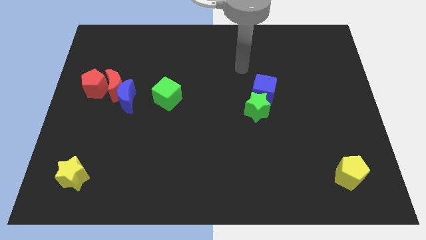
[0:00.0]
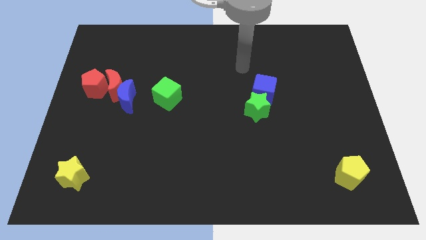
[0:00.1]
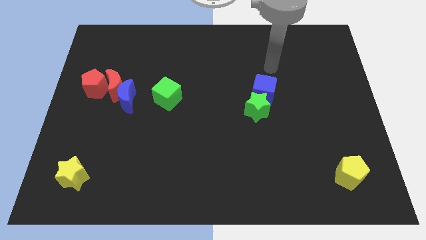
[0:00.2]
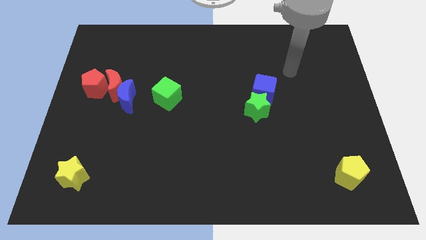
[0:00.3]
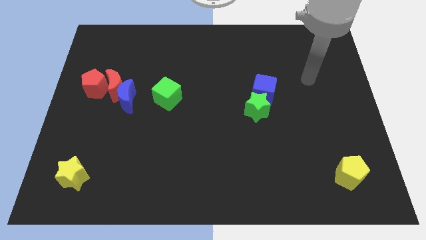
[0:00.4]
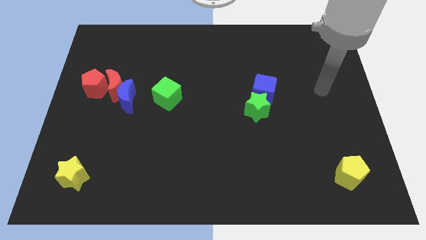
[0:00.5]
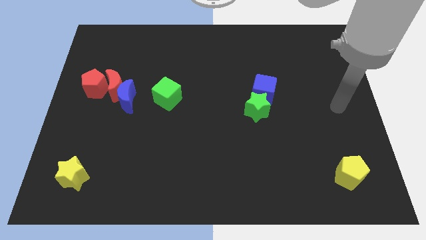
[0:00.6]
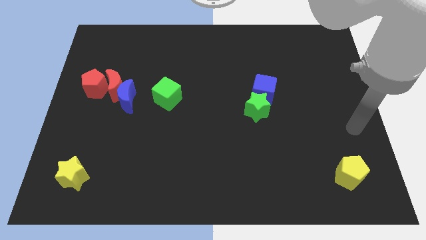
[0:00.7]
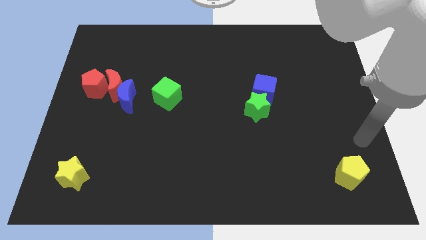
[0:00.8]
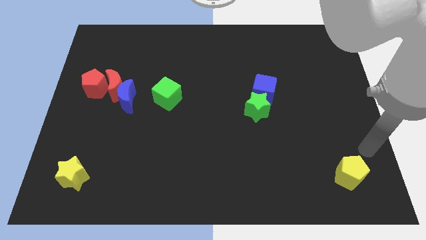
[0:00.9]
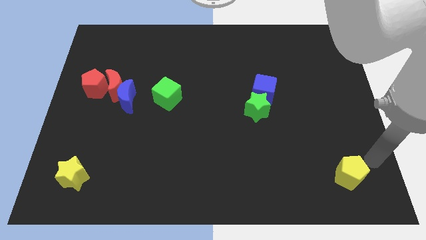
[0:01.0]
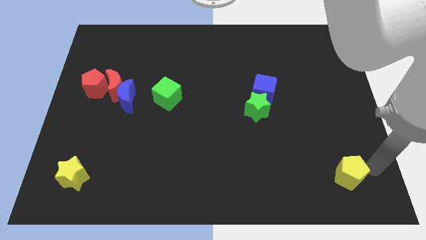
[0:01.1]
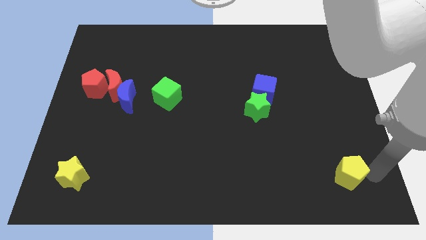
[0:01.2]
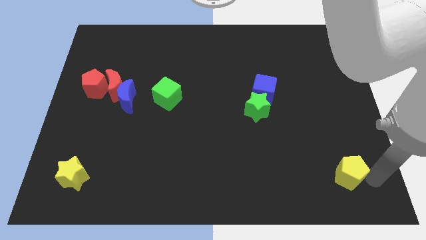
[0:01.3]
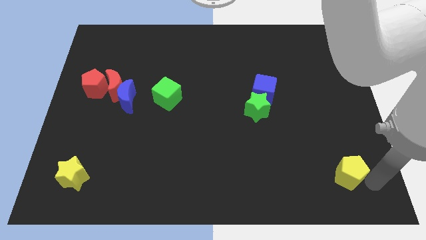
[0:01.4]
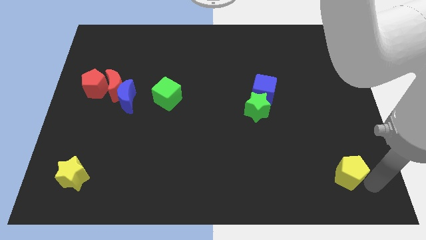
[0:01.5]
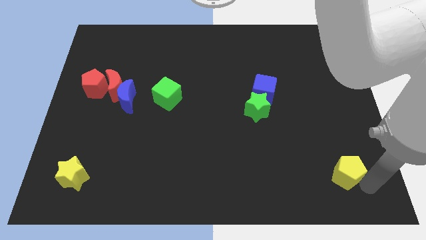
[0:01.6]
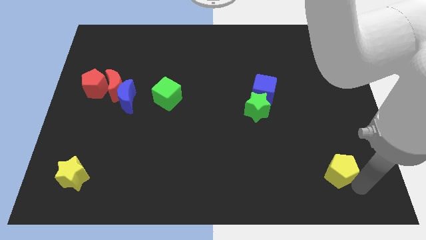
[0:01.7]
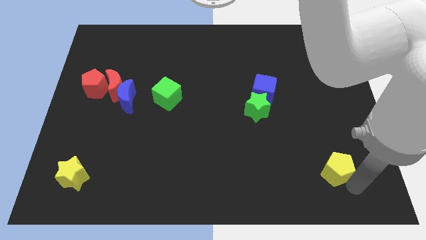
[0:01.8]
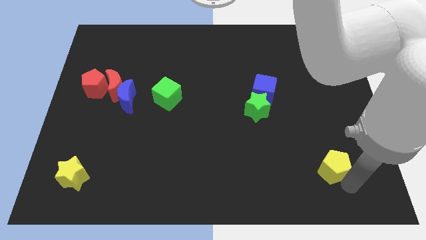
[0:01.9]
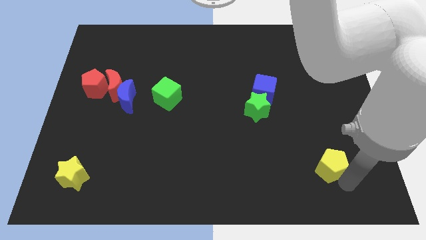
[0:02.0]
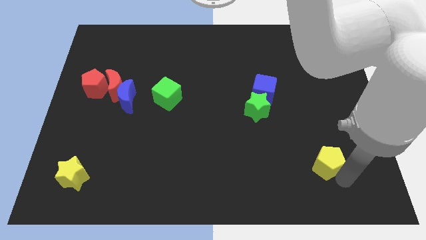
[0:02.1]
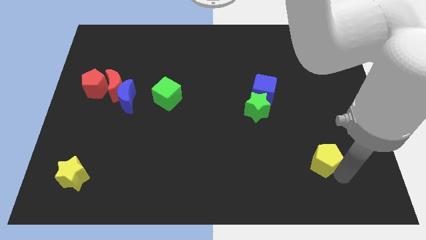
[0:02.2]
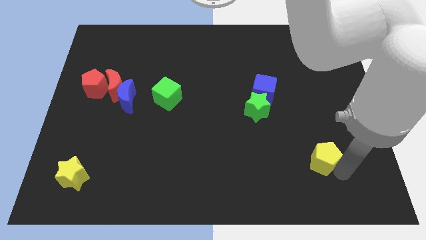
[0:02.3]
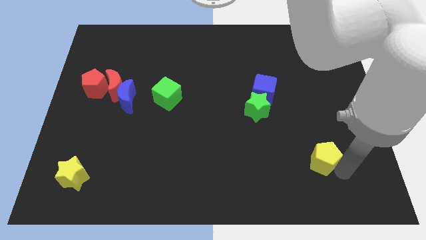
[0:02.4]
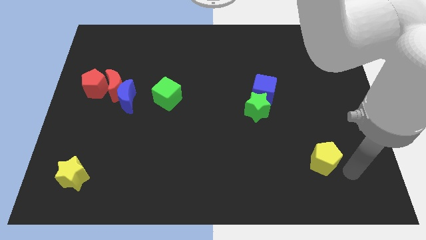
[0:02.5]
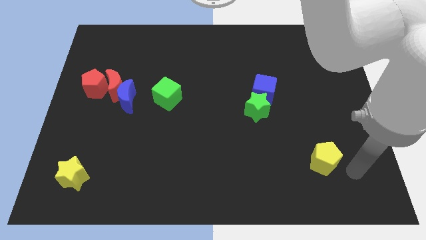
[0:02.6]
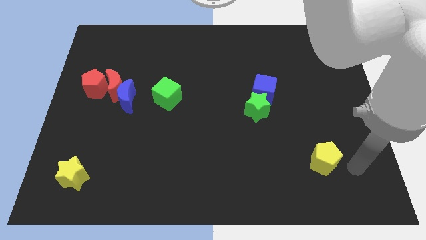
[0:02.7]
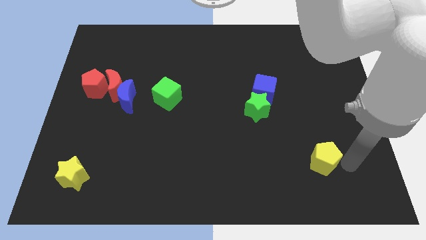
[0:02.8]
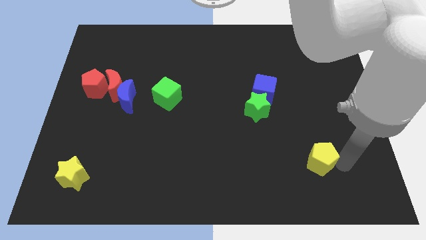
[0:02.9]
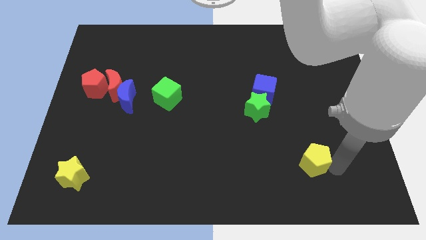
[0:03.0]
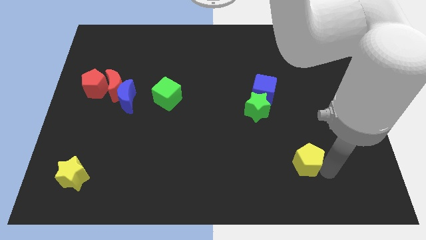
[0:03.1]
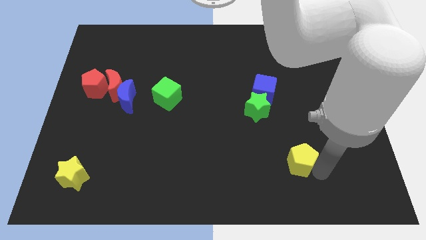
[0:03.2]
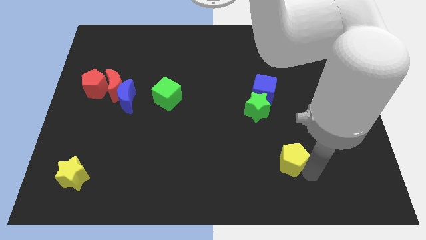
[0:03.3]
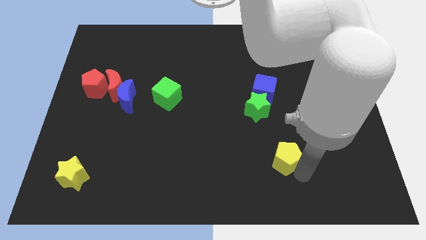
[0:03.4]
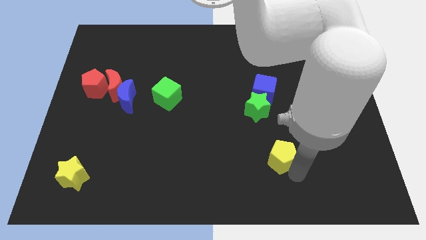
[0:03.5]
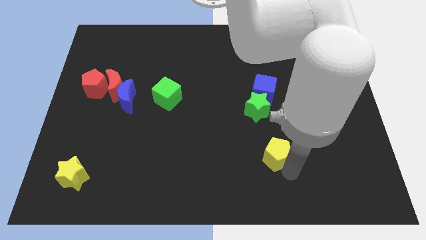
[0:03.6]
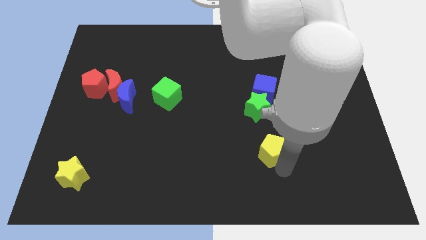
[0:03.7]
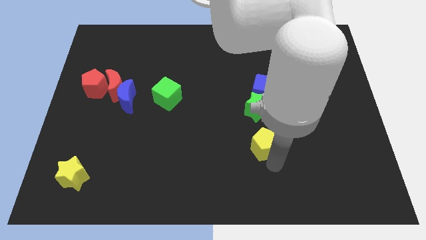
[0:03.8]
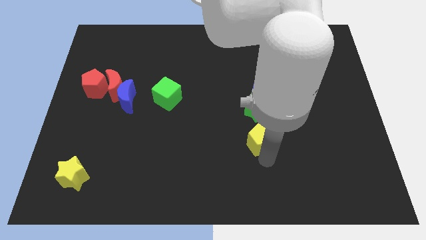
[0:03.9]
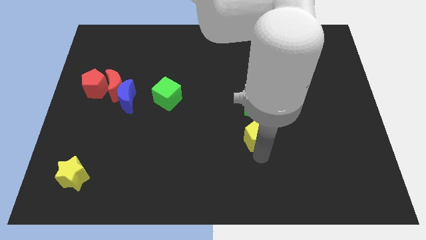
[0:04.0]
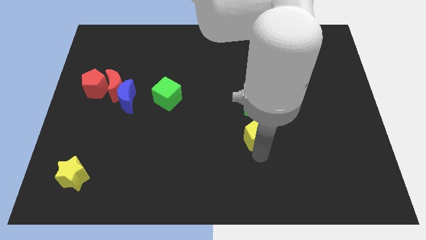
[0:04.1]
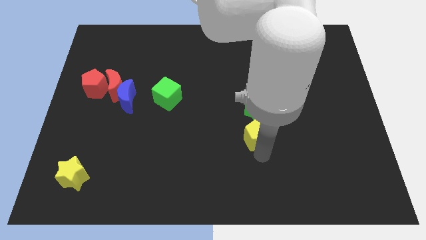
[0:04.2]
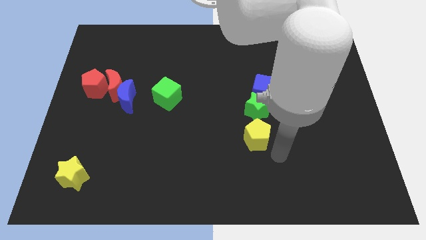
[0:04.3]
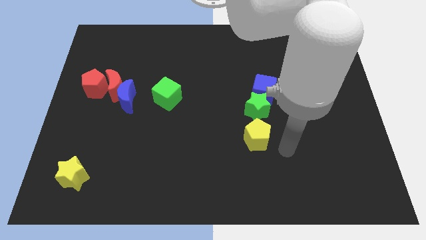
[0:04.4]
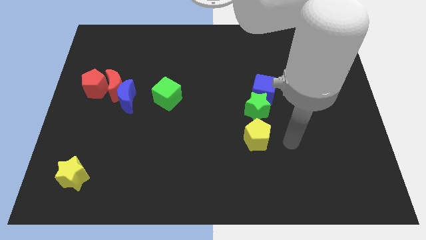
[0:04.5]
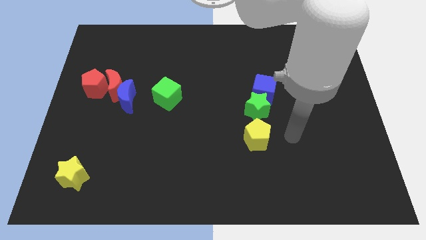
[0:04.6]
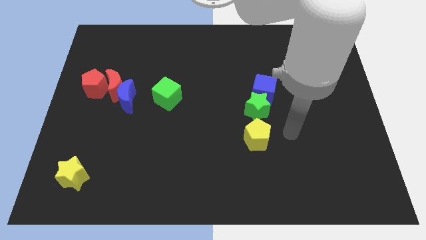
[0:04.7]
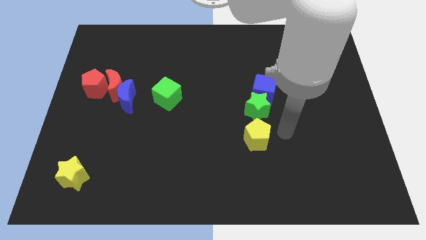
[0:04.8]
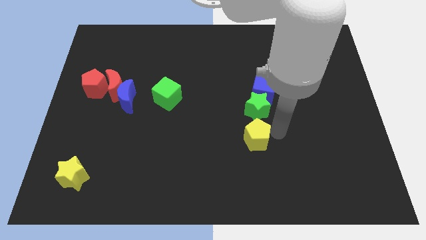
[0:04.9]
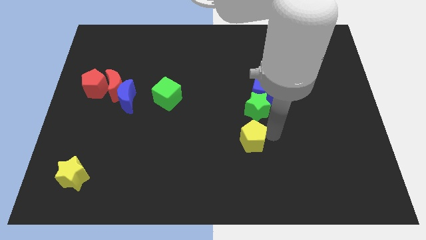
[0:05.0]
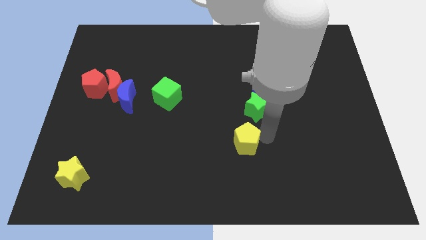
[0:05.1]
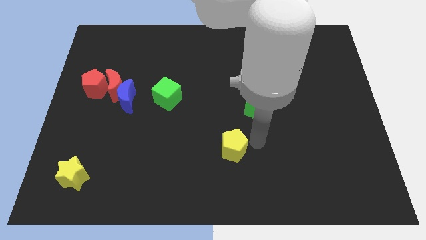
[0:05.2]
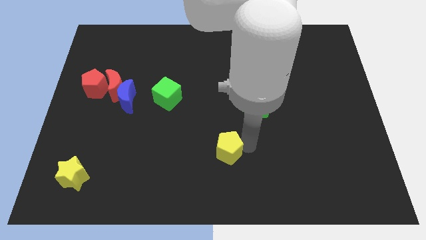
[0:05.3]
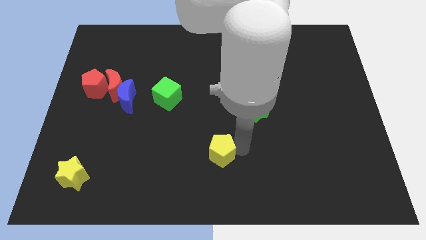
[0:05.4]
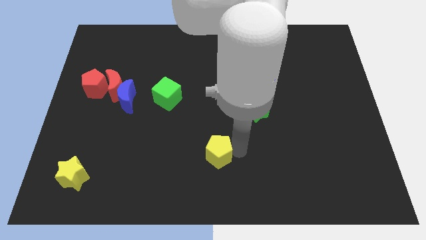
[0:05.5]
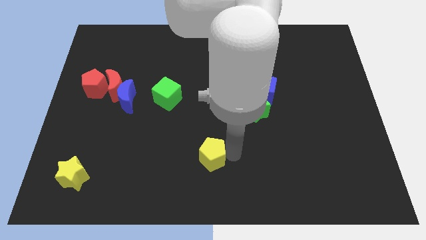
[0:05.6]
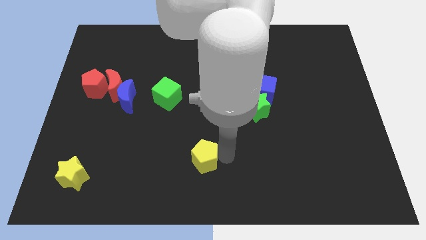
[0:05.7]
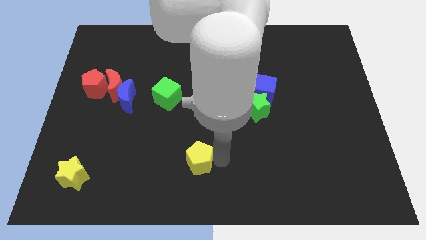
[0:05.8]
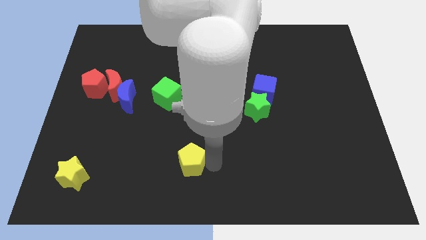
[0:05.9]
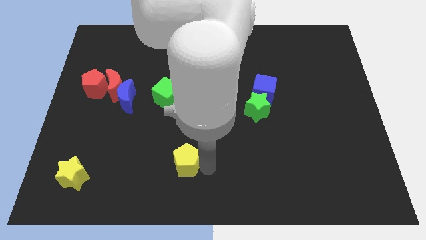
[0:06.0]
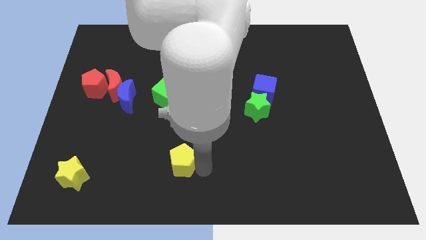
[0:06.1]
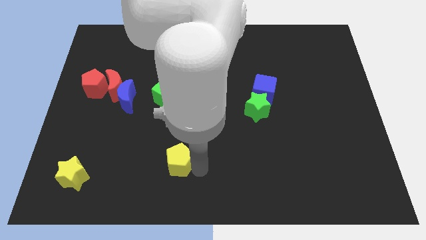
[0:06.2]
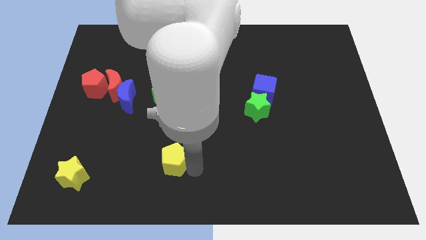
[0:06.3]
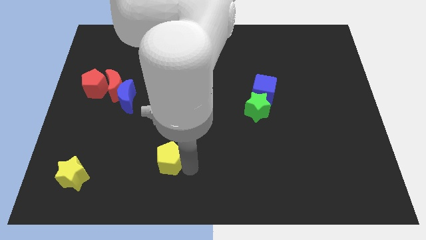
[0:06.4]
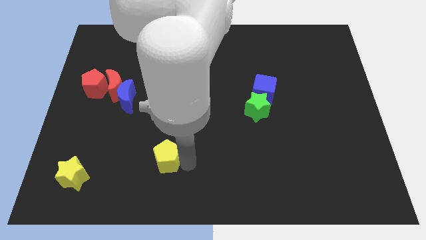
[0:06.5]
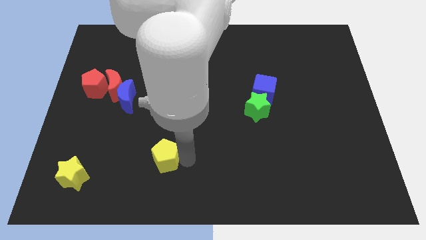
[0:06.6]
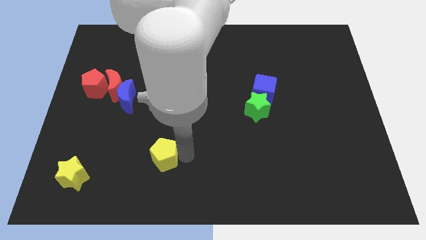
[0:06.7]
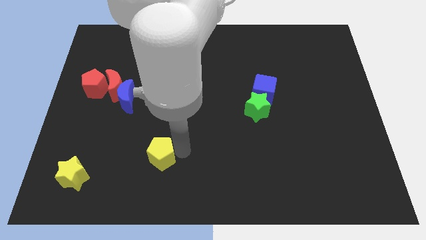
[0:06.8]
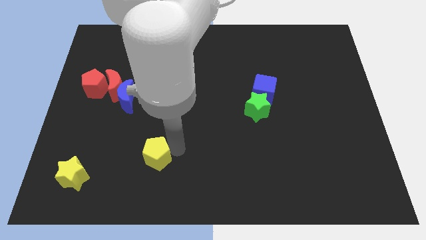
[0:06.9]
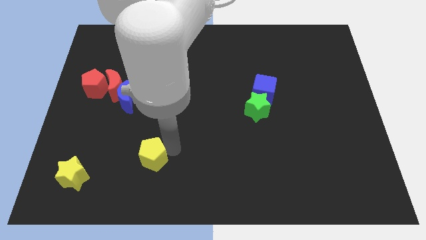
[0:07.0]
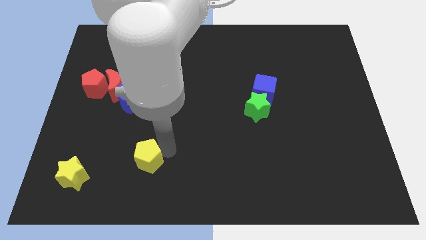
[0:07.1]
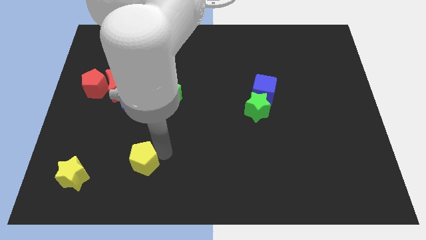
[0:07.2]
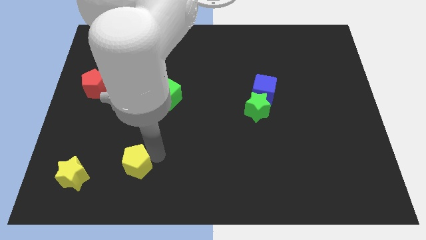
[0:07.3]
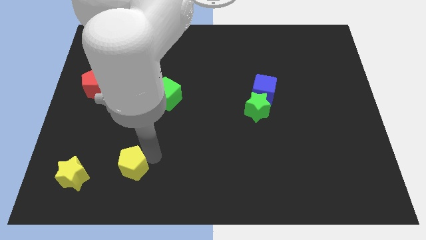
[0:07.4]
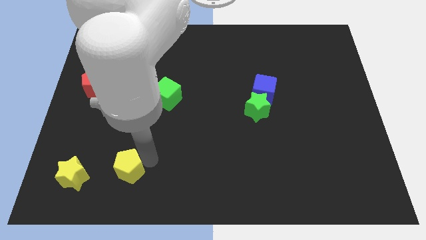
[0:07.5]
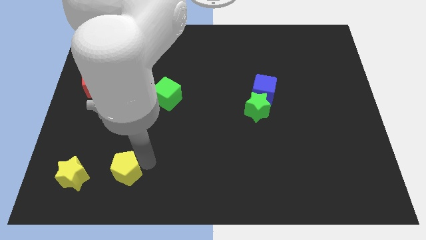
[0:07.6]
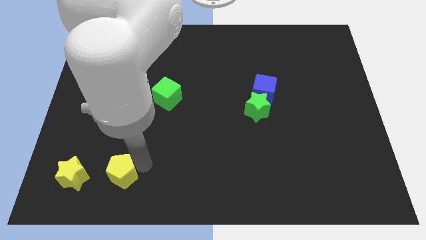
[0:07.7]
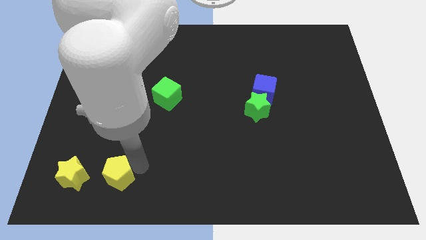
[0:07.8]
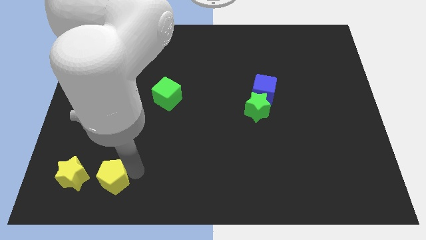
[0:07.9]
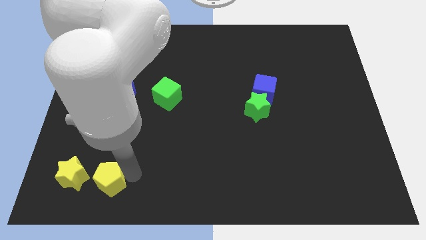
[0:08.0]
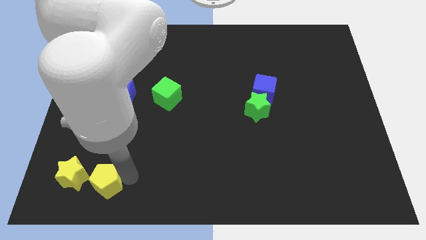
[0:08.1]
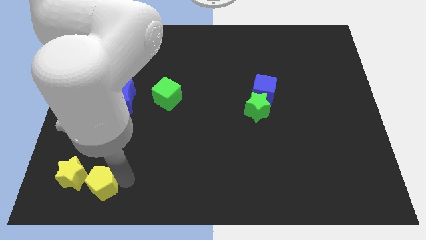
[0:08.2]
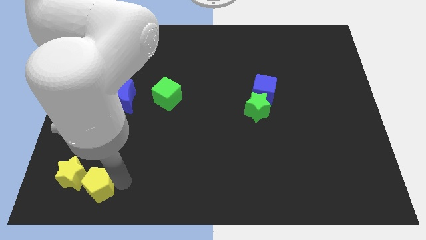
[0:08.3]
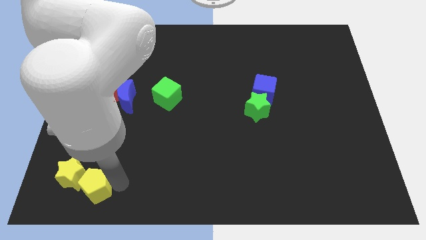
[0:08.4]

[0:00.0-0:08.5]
slide the yellow pentagon close to the yellow star

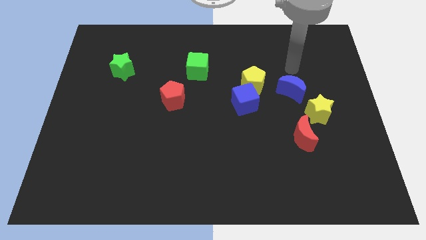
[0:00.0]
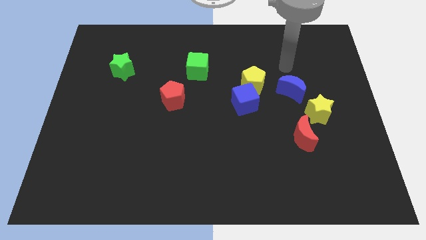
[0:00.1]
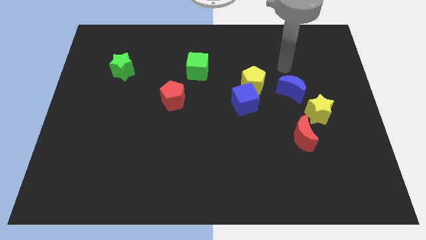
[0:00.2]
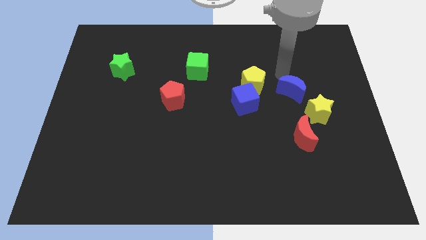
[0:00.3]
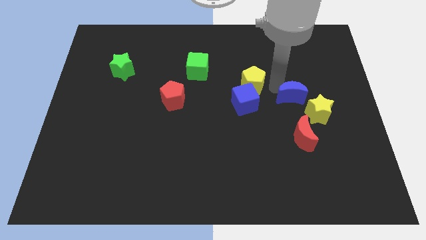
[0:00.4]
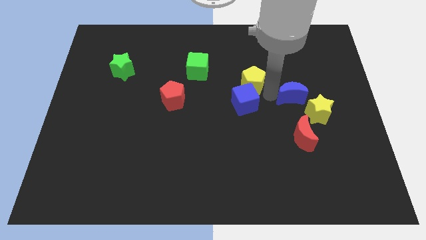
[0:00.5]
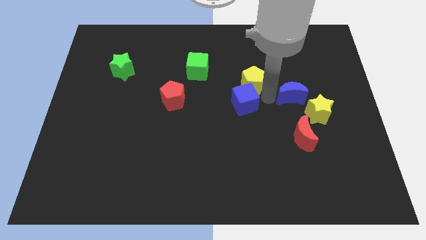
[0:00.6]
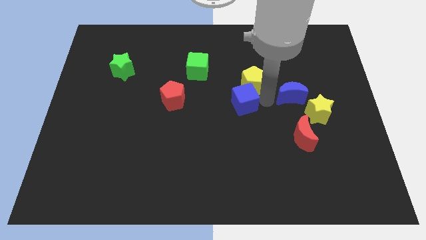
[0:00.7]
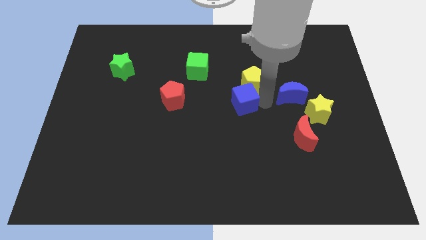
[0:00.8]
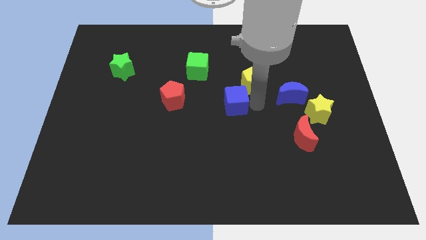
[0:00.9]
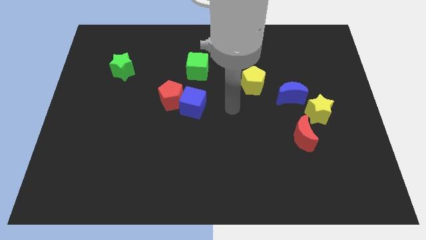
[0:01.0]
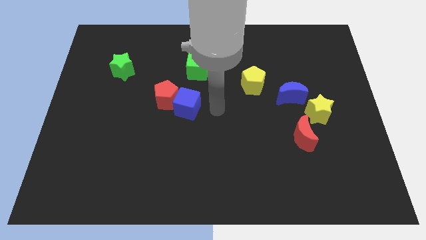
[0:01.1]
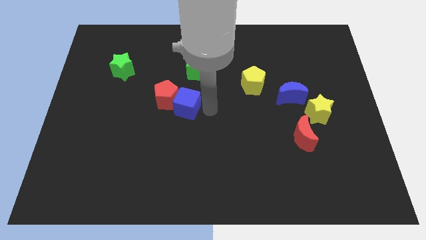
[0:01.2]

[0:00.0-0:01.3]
move the blue cube close to the red pentagon
